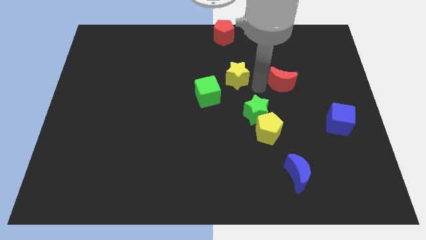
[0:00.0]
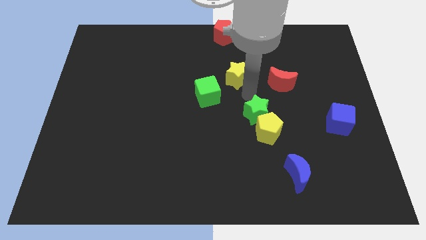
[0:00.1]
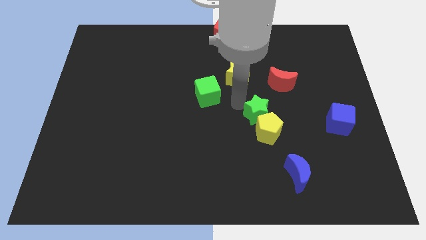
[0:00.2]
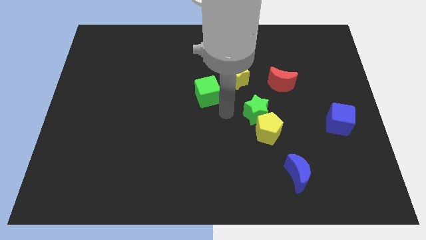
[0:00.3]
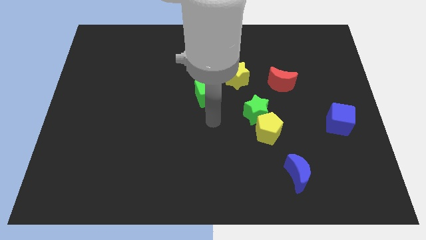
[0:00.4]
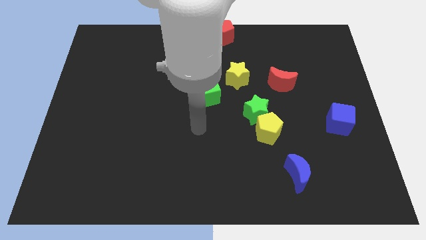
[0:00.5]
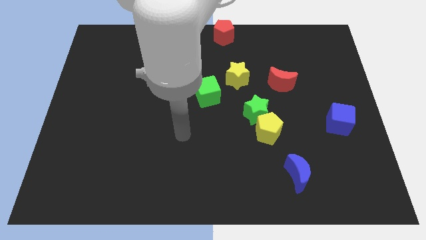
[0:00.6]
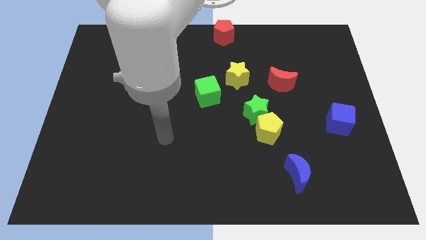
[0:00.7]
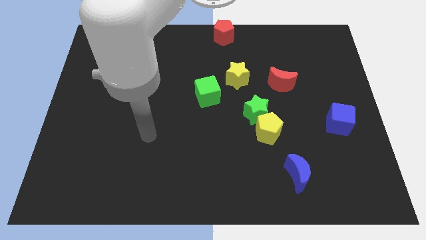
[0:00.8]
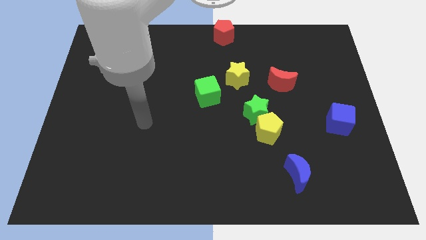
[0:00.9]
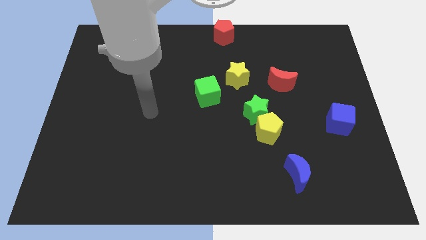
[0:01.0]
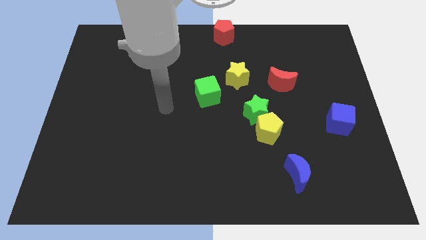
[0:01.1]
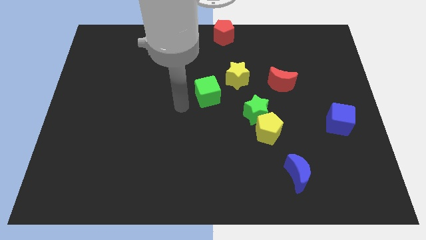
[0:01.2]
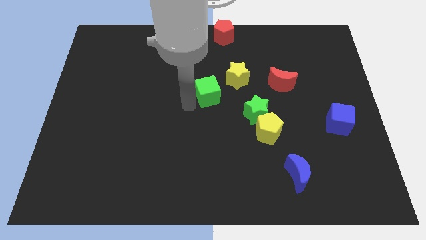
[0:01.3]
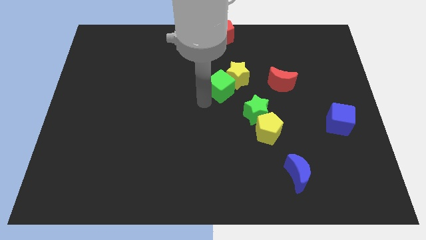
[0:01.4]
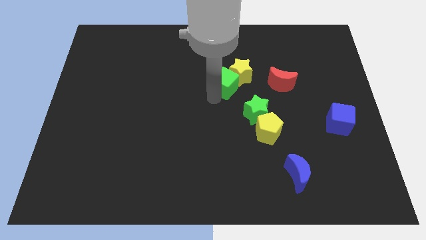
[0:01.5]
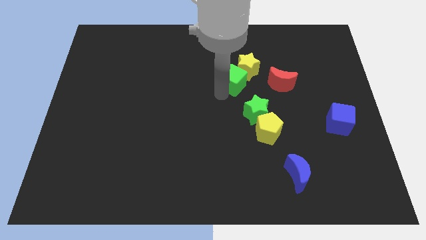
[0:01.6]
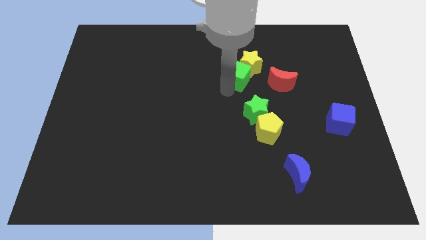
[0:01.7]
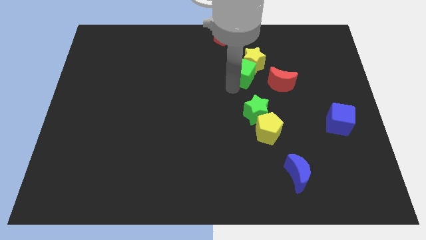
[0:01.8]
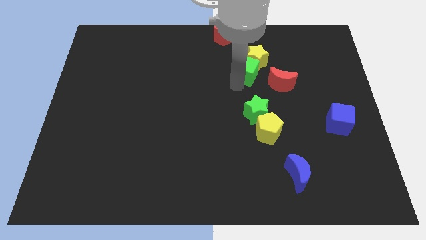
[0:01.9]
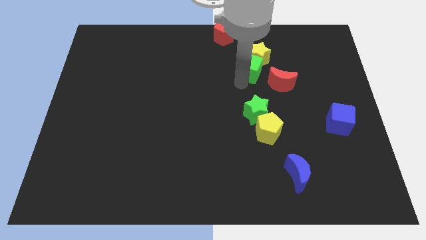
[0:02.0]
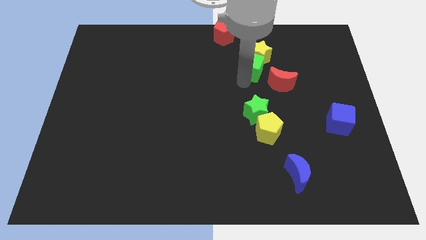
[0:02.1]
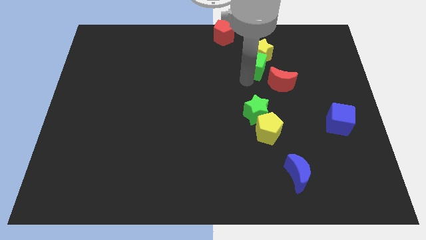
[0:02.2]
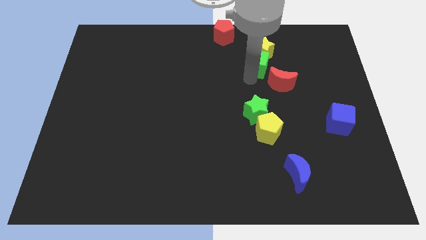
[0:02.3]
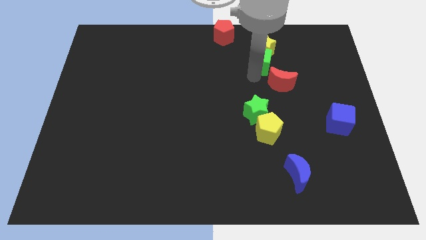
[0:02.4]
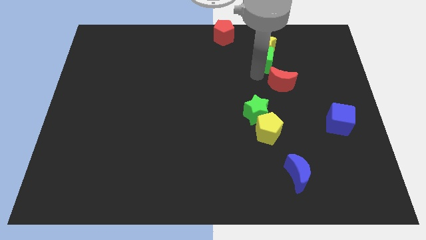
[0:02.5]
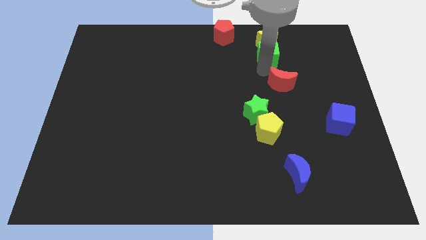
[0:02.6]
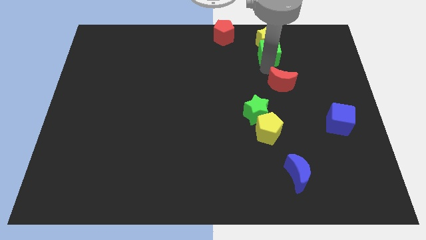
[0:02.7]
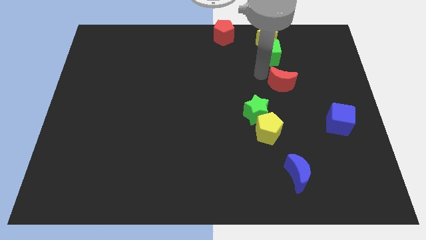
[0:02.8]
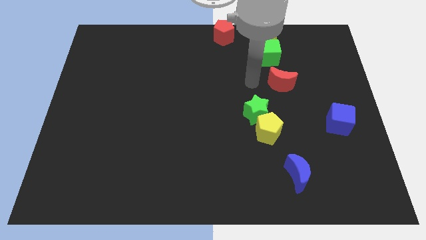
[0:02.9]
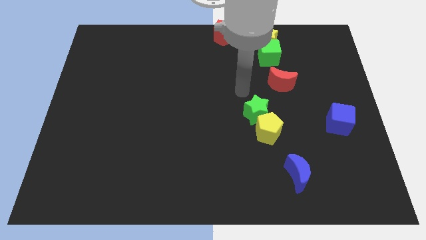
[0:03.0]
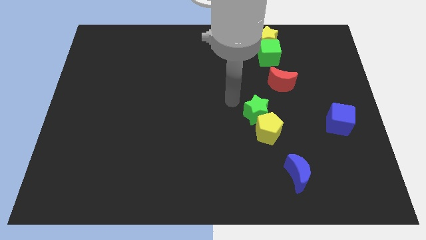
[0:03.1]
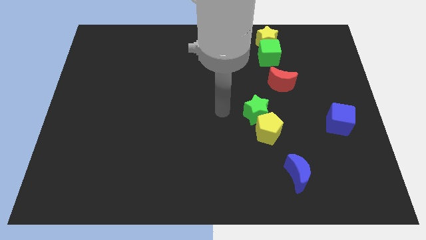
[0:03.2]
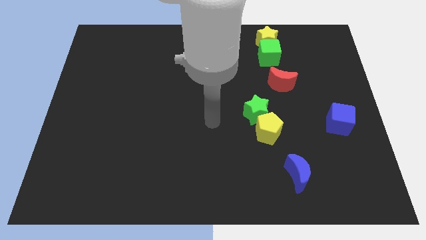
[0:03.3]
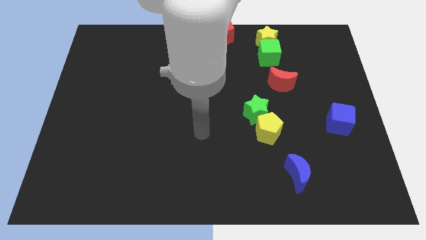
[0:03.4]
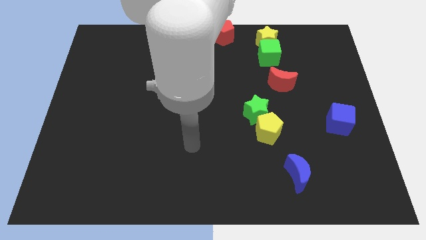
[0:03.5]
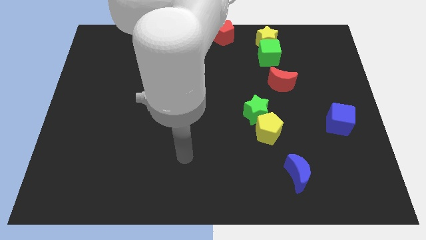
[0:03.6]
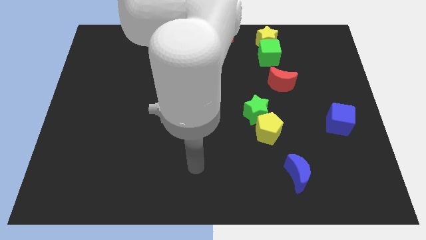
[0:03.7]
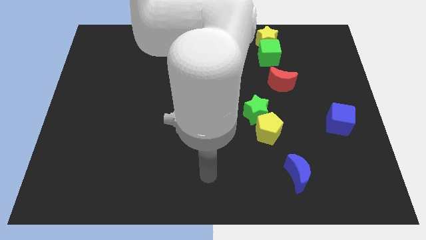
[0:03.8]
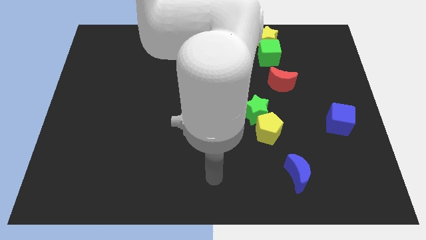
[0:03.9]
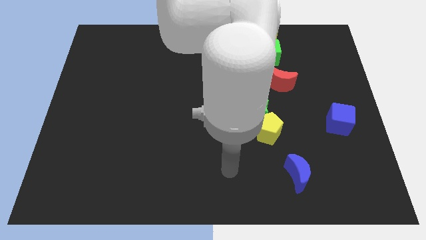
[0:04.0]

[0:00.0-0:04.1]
move the green cube and the yellow star to the top of the board

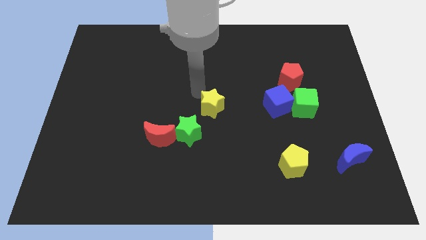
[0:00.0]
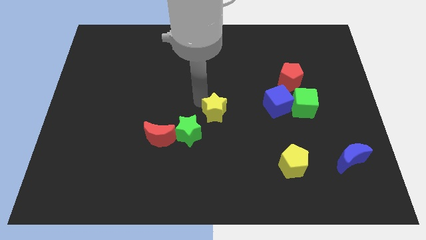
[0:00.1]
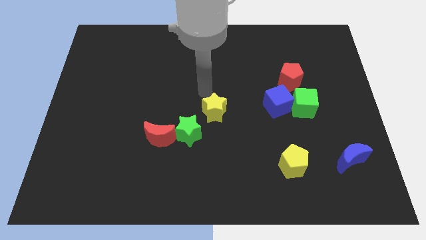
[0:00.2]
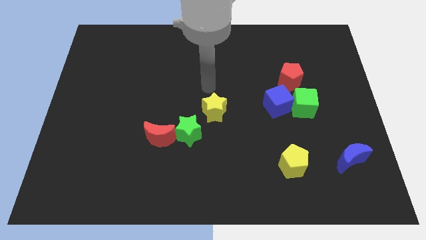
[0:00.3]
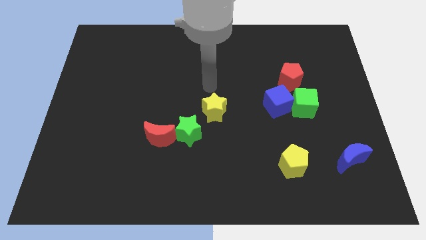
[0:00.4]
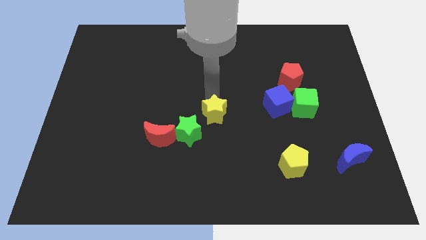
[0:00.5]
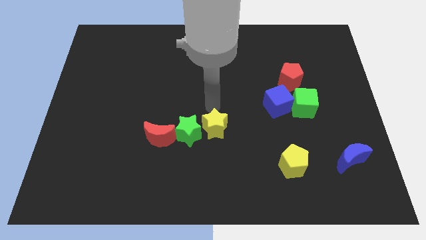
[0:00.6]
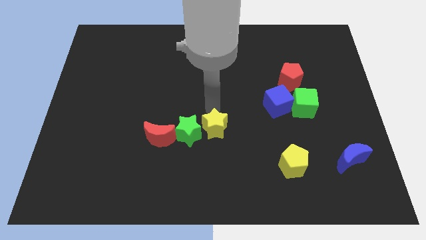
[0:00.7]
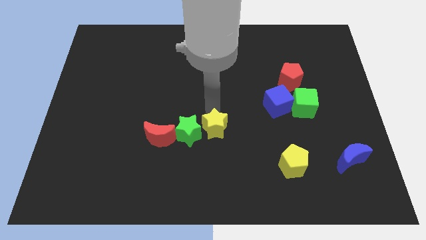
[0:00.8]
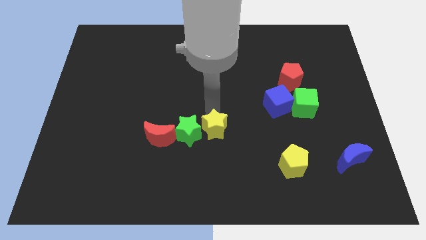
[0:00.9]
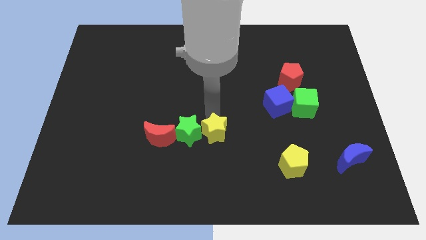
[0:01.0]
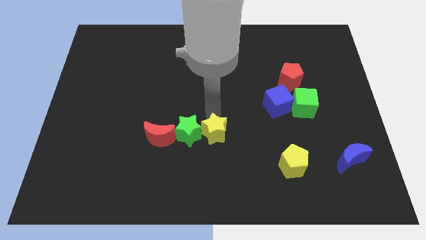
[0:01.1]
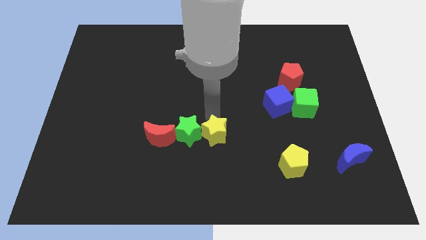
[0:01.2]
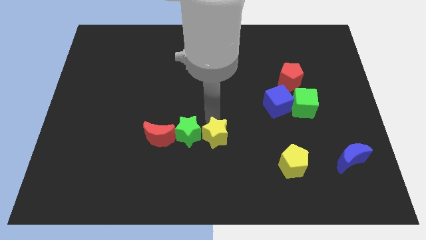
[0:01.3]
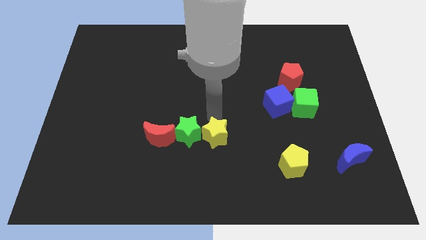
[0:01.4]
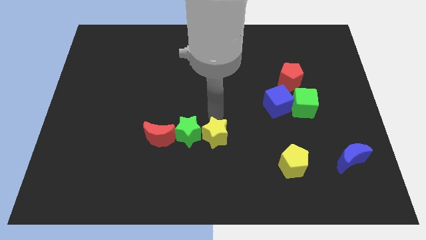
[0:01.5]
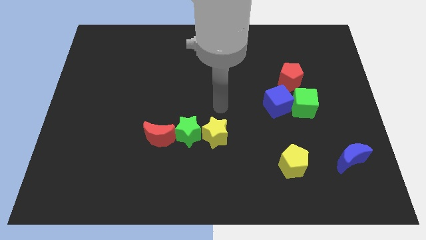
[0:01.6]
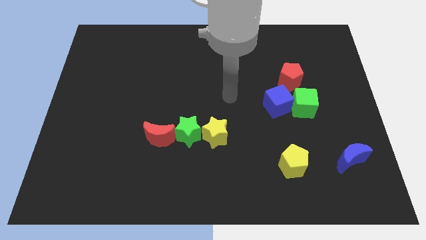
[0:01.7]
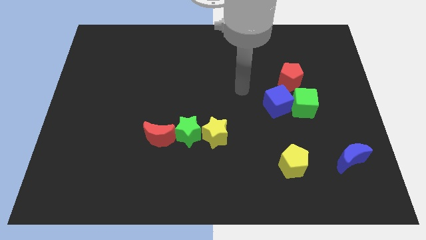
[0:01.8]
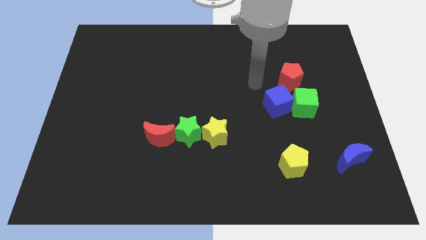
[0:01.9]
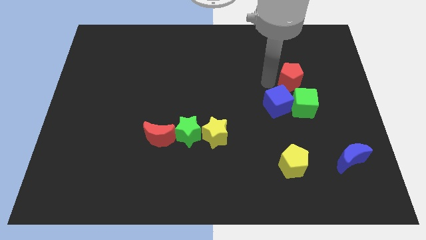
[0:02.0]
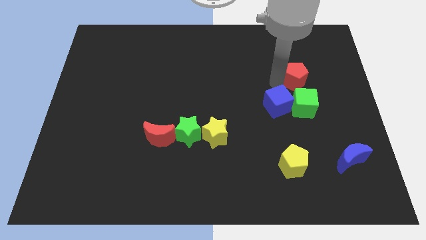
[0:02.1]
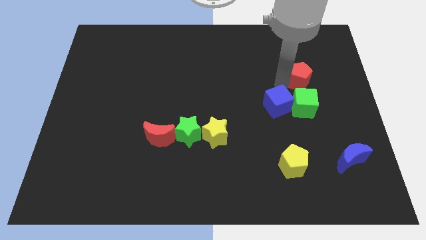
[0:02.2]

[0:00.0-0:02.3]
place the yellow star on the right side of the green star

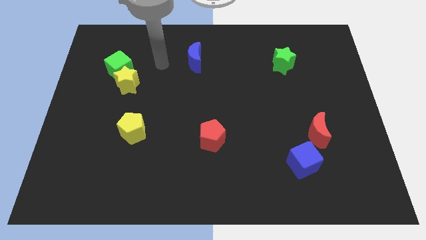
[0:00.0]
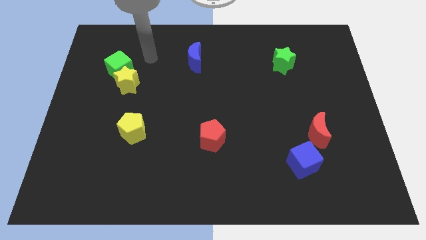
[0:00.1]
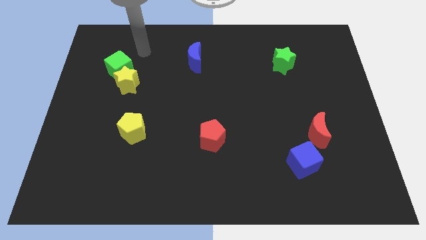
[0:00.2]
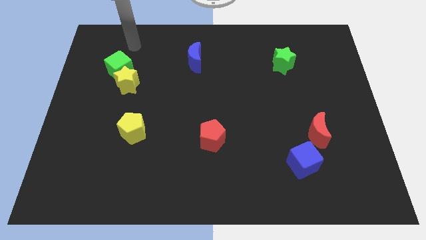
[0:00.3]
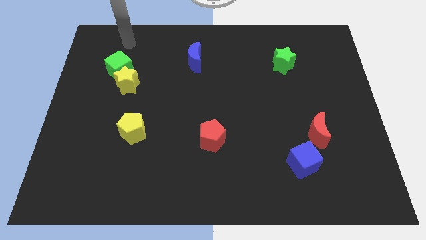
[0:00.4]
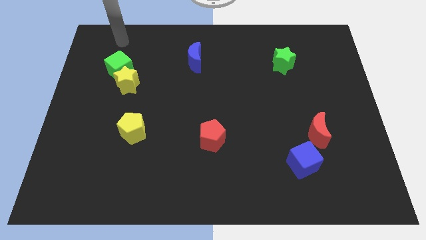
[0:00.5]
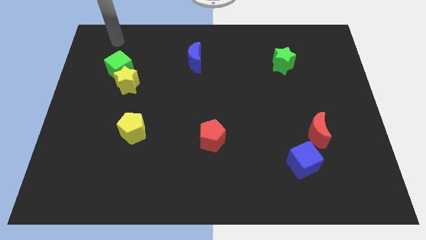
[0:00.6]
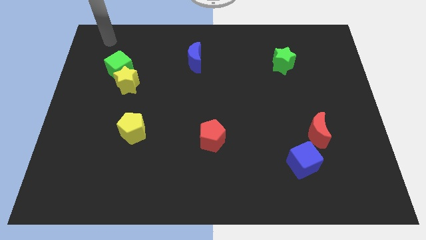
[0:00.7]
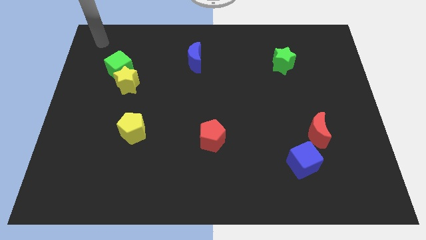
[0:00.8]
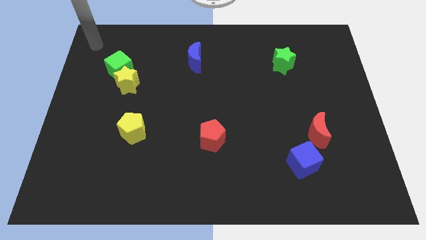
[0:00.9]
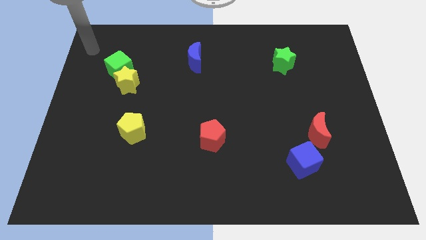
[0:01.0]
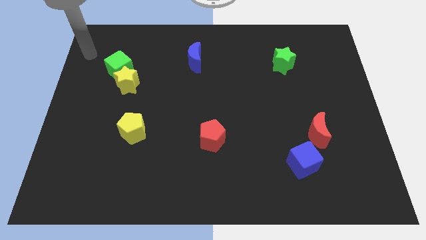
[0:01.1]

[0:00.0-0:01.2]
move arm away from blue moon

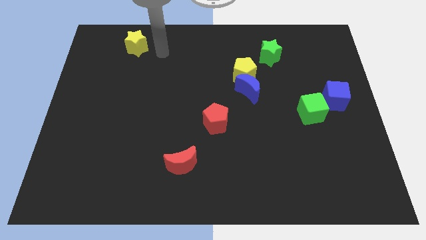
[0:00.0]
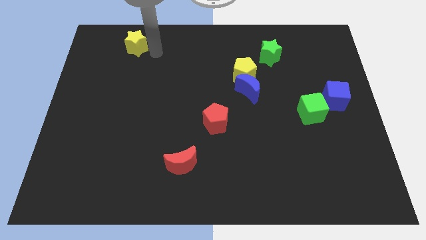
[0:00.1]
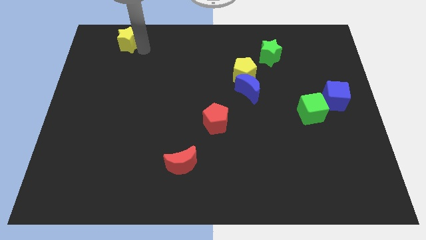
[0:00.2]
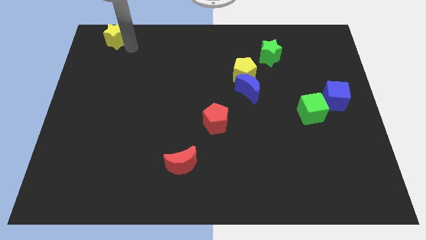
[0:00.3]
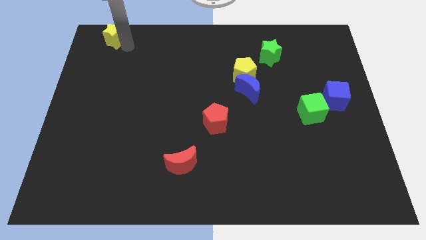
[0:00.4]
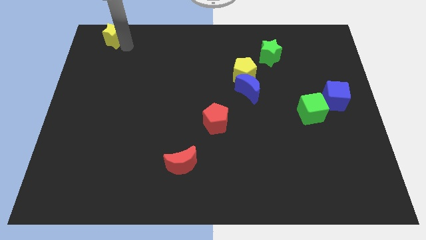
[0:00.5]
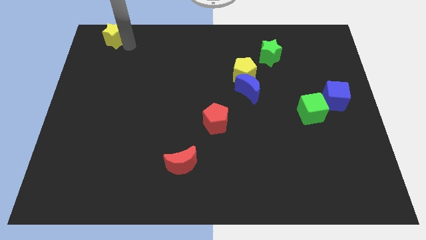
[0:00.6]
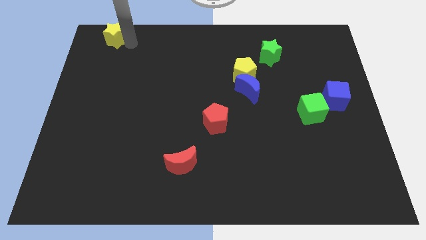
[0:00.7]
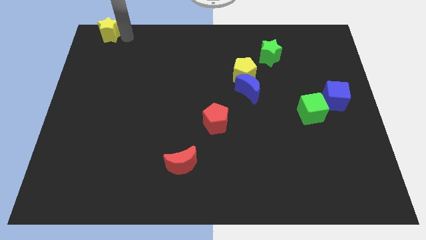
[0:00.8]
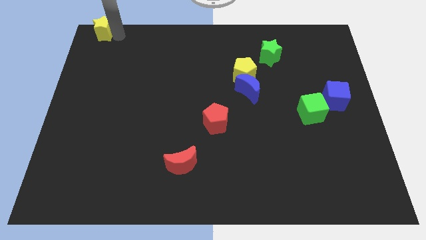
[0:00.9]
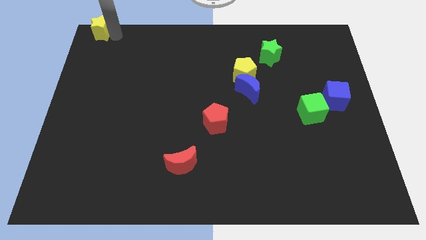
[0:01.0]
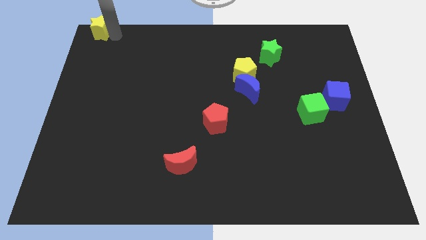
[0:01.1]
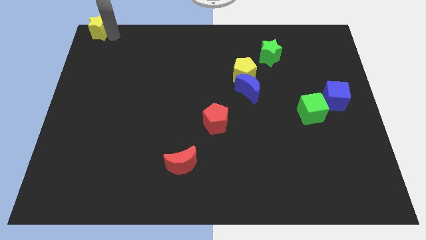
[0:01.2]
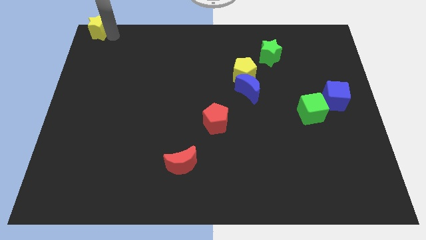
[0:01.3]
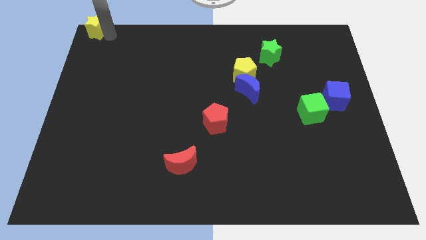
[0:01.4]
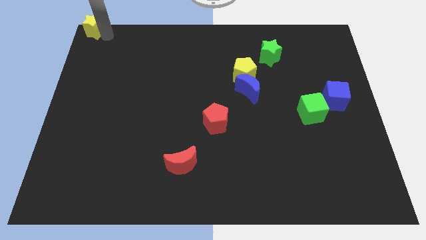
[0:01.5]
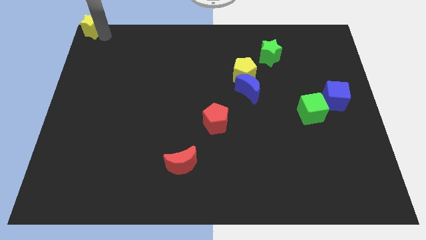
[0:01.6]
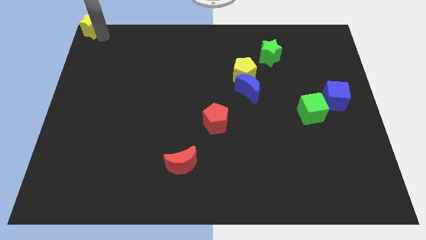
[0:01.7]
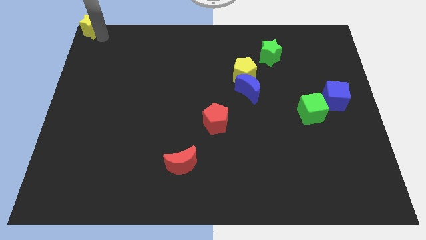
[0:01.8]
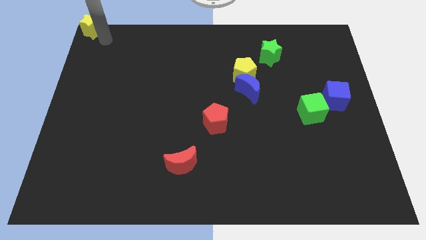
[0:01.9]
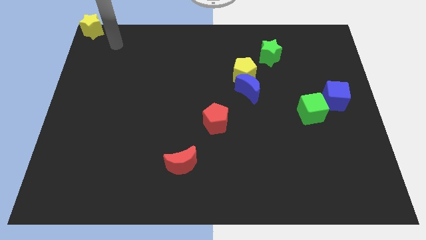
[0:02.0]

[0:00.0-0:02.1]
move the yellow star to the top left corner of the board
